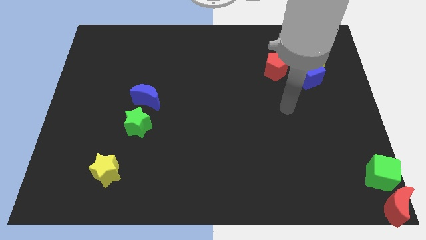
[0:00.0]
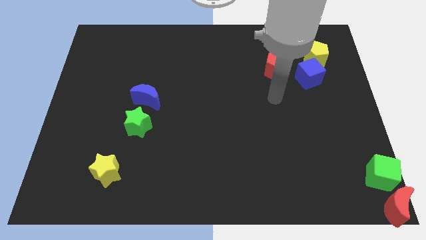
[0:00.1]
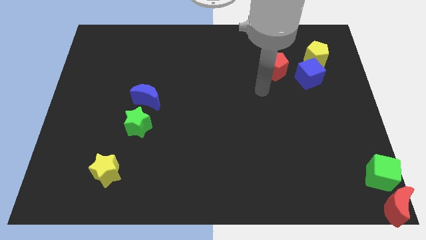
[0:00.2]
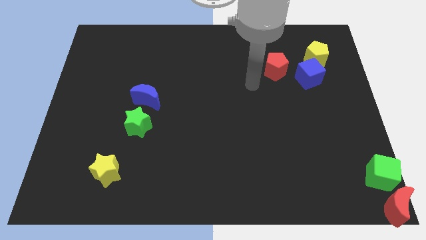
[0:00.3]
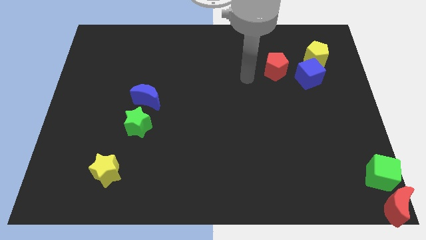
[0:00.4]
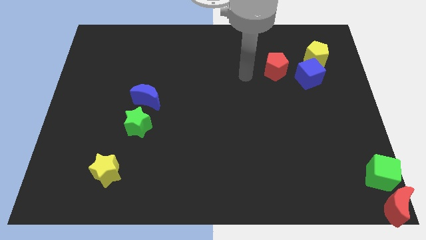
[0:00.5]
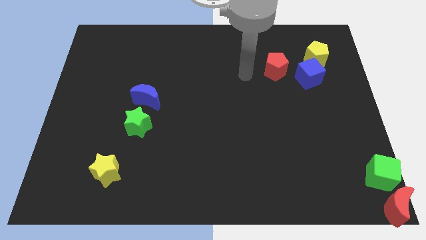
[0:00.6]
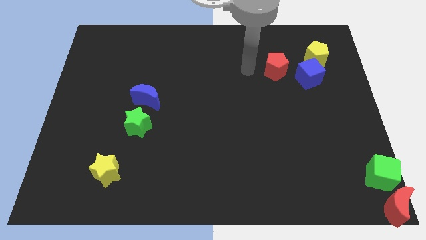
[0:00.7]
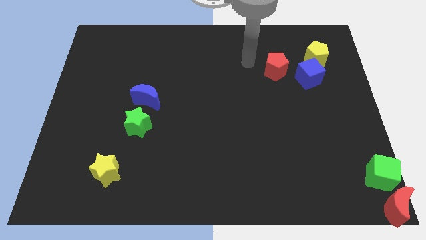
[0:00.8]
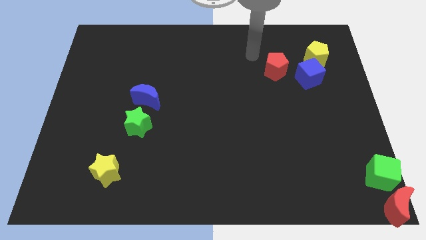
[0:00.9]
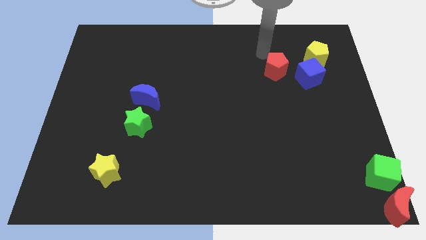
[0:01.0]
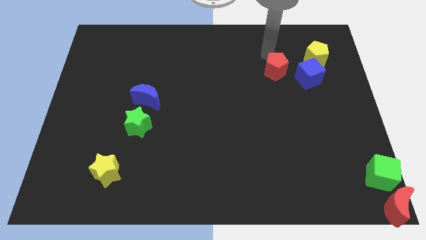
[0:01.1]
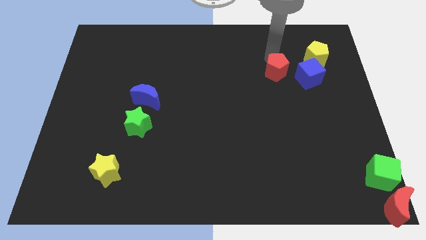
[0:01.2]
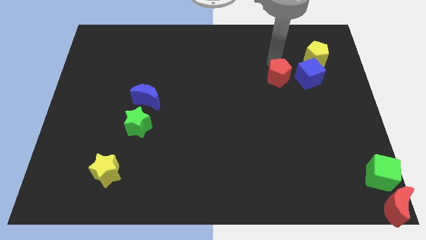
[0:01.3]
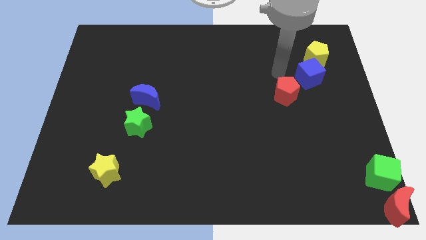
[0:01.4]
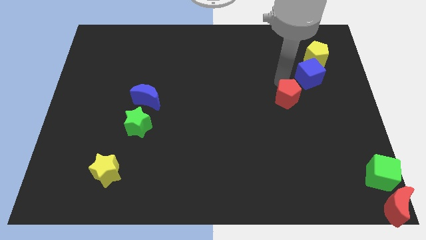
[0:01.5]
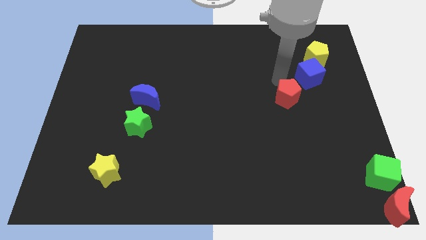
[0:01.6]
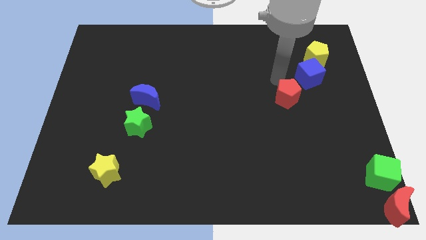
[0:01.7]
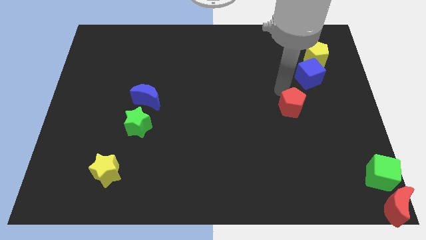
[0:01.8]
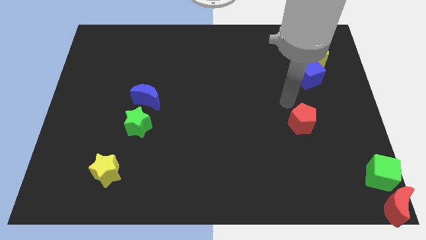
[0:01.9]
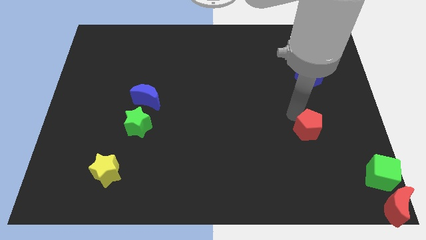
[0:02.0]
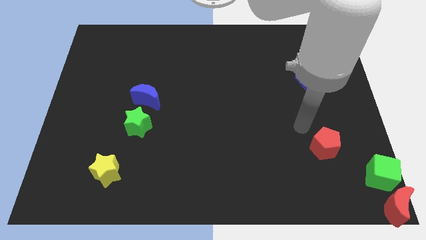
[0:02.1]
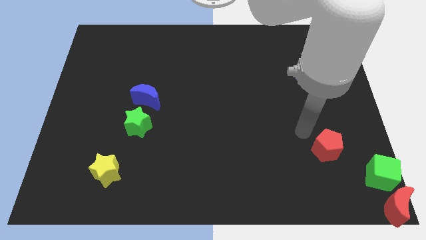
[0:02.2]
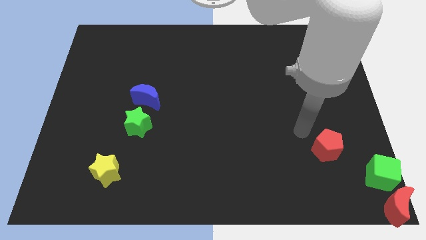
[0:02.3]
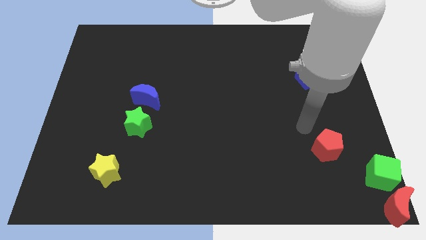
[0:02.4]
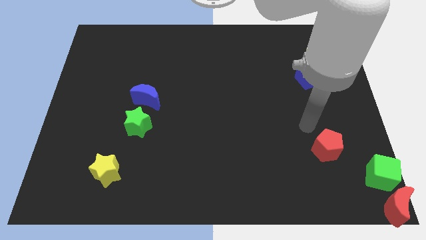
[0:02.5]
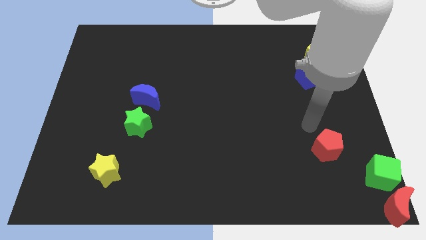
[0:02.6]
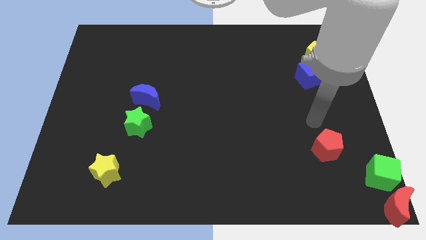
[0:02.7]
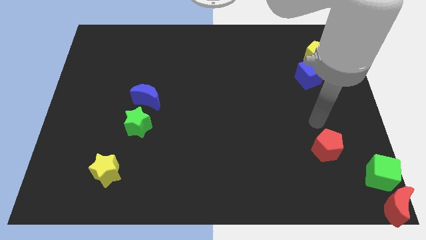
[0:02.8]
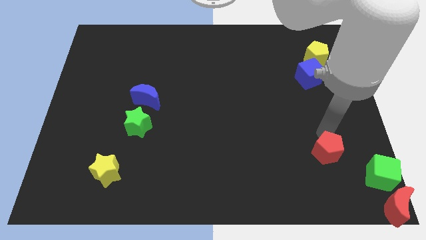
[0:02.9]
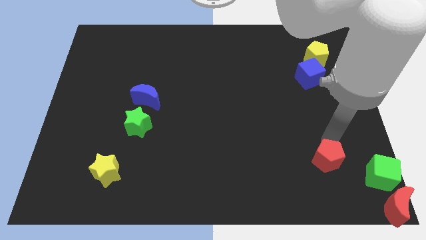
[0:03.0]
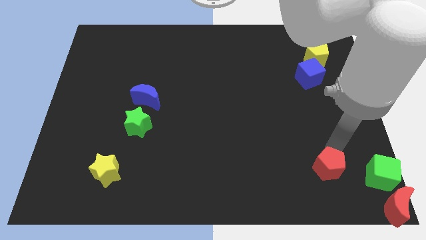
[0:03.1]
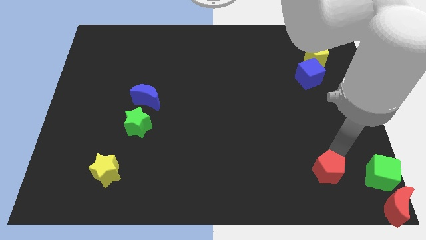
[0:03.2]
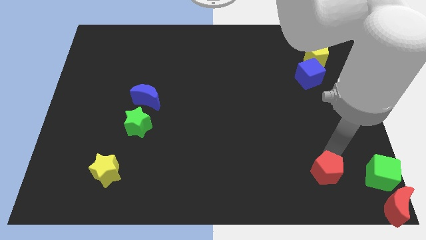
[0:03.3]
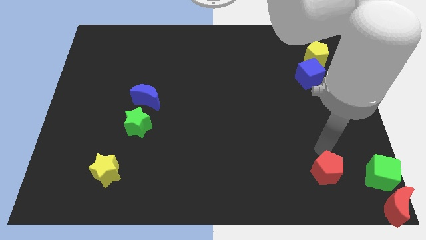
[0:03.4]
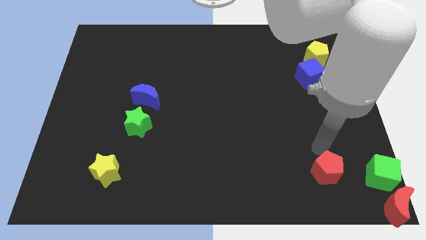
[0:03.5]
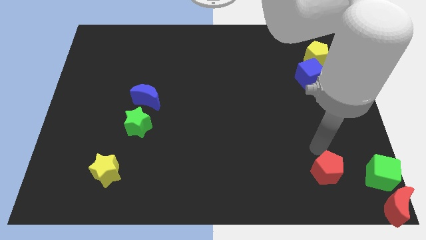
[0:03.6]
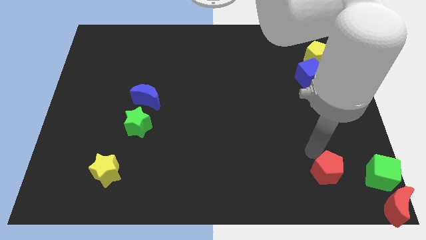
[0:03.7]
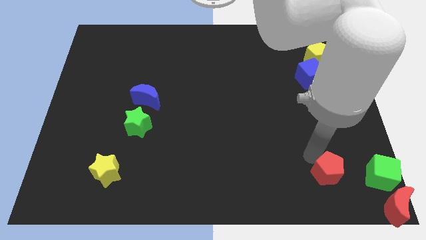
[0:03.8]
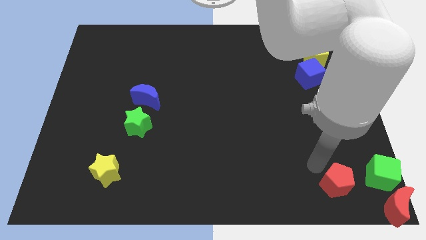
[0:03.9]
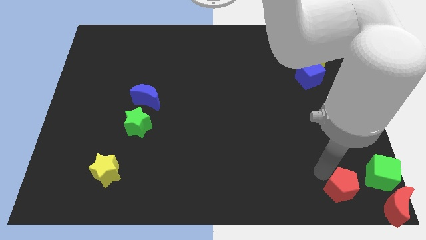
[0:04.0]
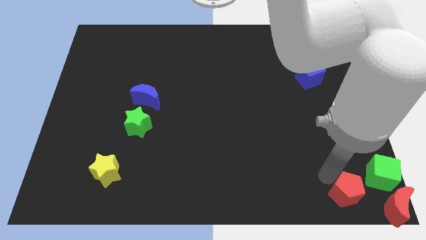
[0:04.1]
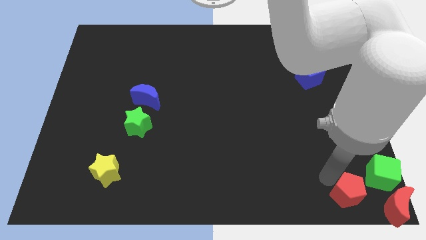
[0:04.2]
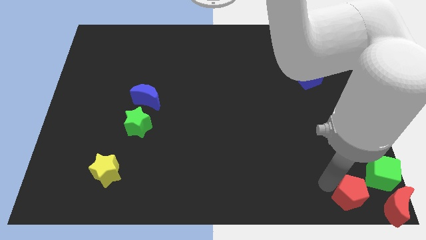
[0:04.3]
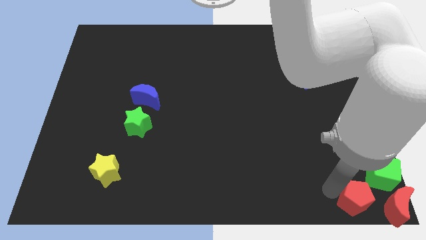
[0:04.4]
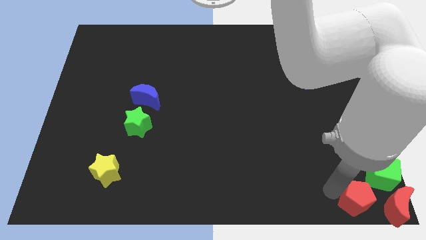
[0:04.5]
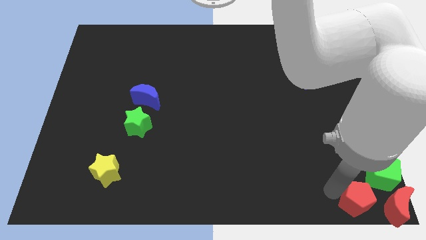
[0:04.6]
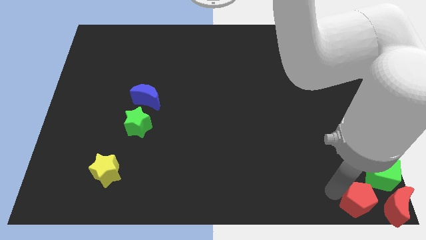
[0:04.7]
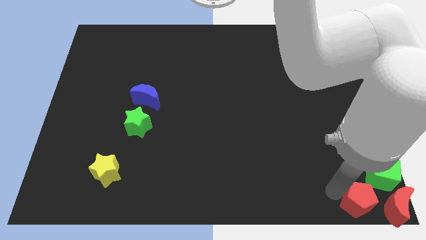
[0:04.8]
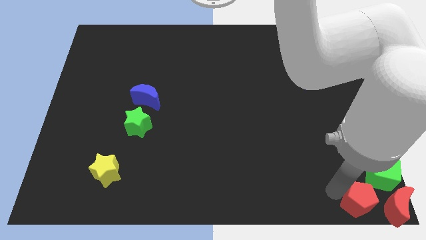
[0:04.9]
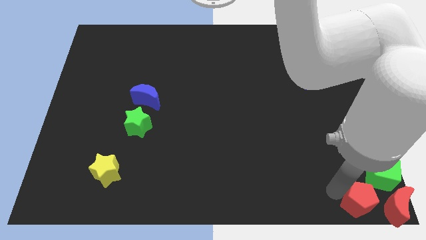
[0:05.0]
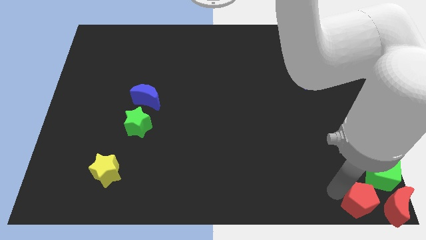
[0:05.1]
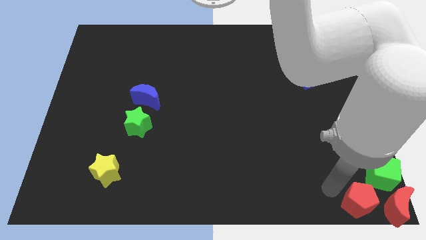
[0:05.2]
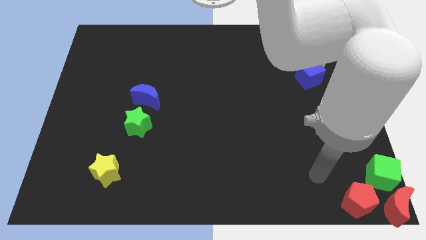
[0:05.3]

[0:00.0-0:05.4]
place the red pentagon left to the red moon

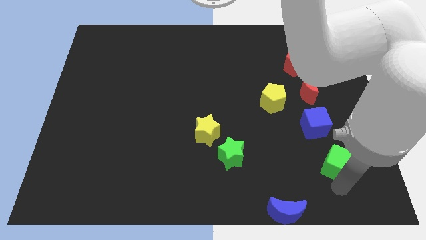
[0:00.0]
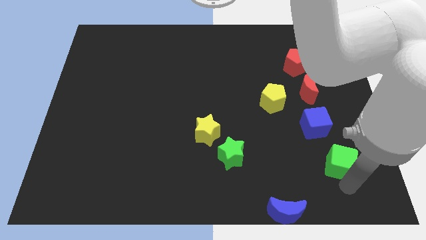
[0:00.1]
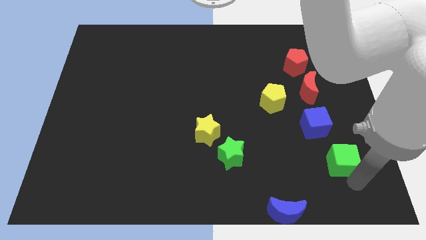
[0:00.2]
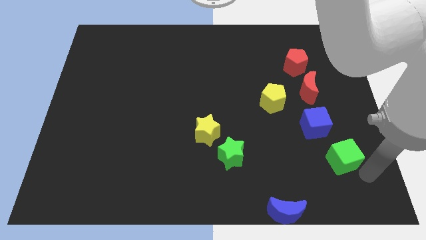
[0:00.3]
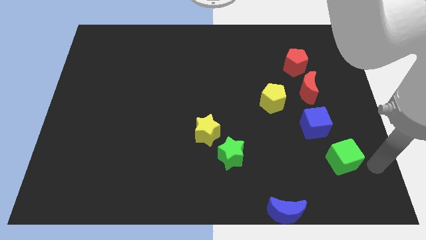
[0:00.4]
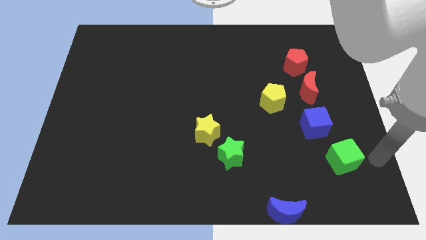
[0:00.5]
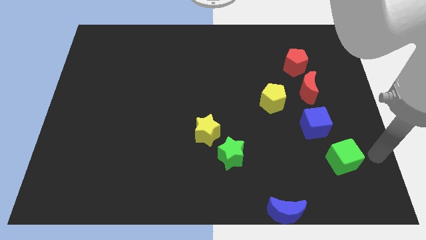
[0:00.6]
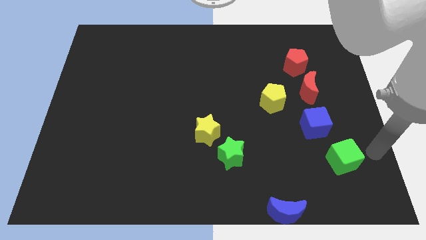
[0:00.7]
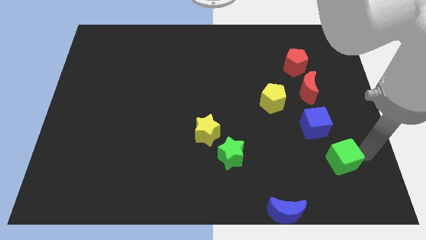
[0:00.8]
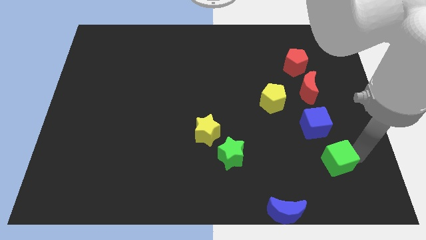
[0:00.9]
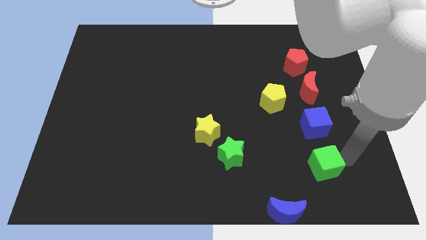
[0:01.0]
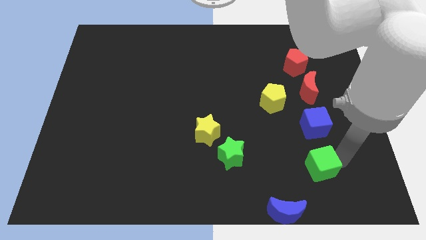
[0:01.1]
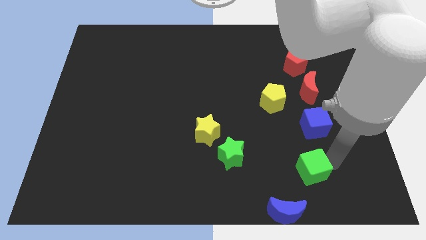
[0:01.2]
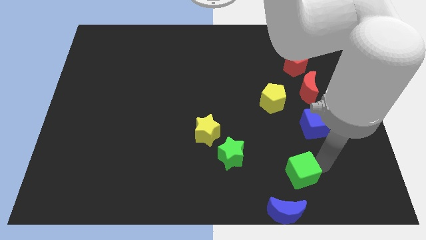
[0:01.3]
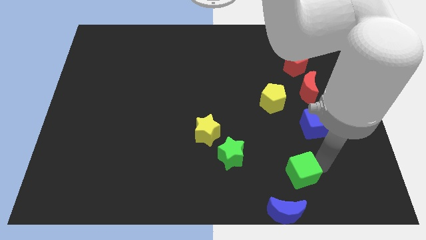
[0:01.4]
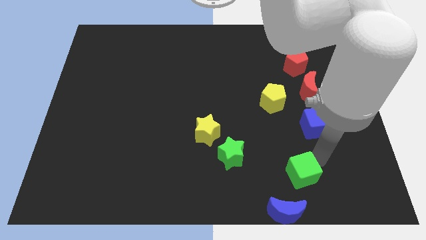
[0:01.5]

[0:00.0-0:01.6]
slide the green cube between the blue cube and blue moon

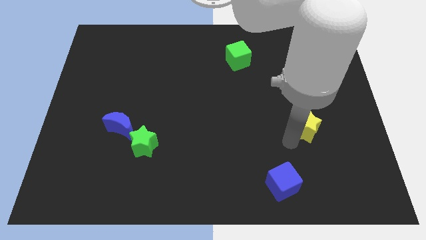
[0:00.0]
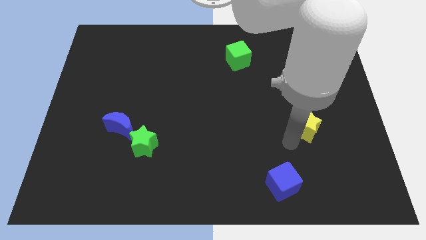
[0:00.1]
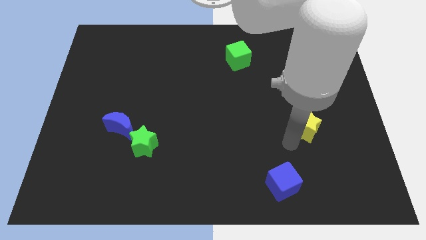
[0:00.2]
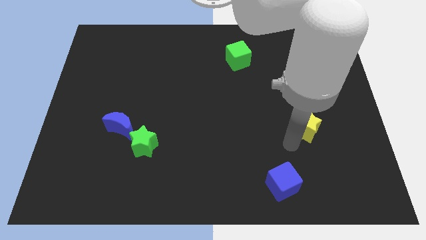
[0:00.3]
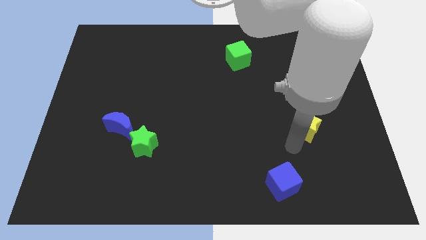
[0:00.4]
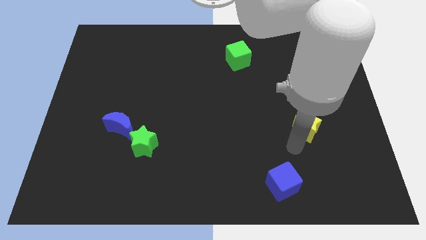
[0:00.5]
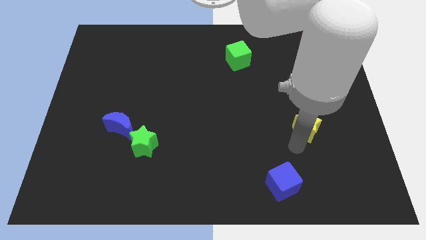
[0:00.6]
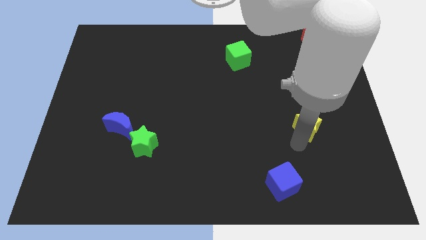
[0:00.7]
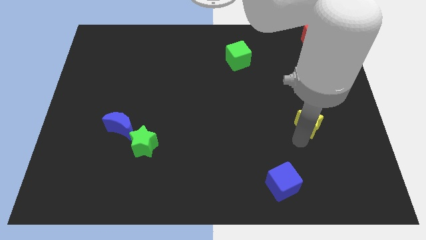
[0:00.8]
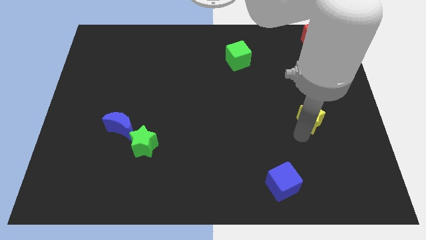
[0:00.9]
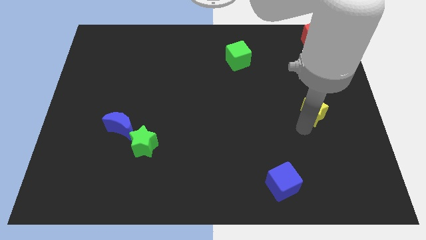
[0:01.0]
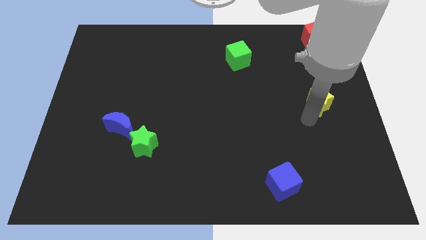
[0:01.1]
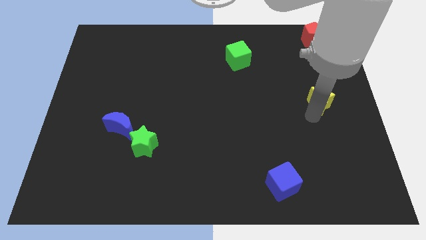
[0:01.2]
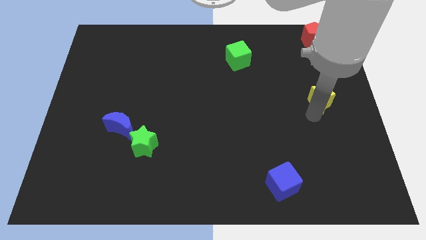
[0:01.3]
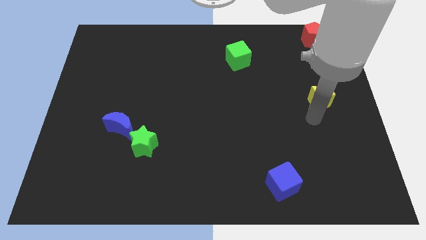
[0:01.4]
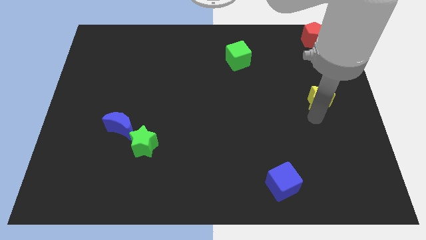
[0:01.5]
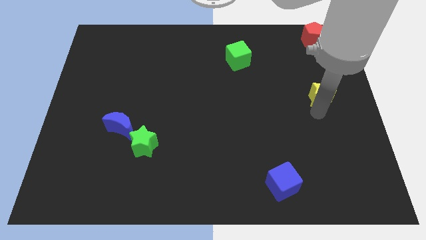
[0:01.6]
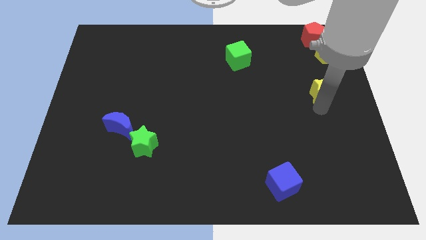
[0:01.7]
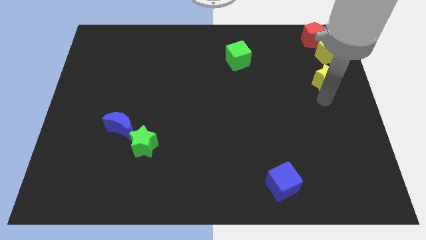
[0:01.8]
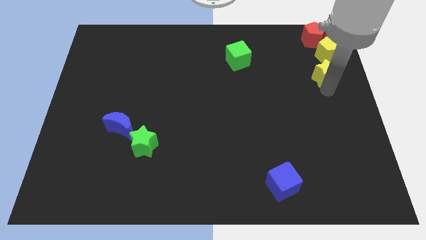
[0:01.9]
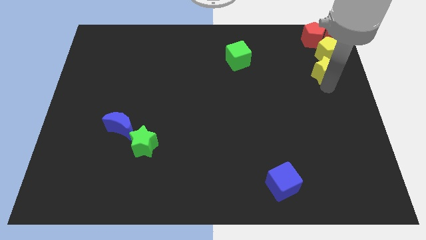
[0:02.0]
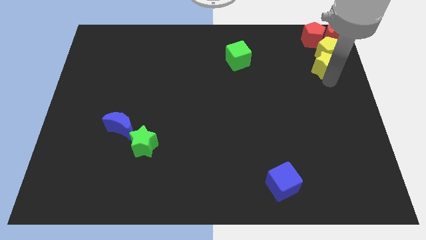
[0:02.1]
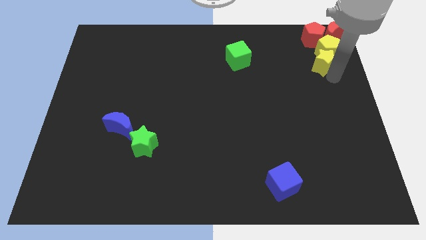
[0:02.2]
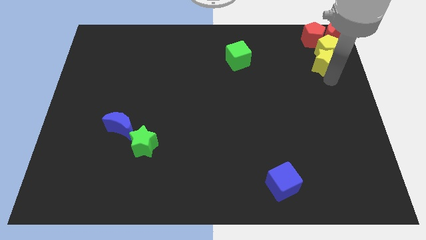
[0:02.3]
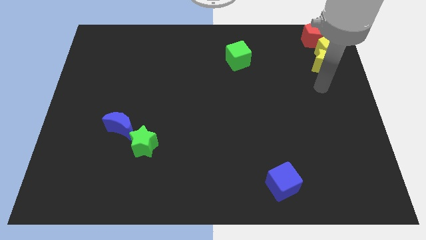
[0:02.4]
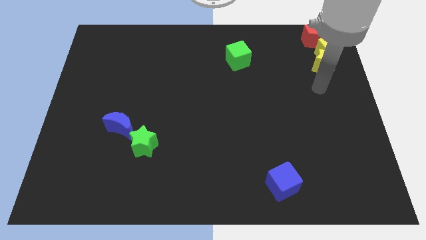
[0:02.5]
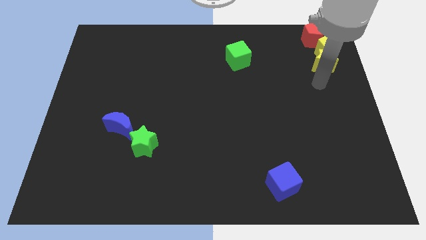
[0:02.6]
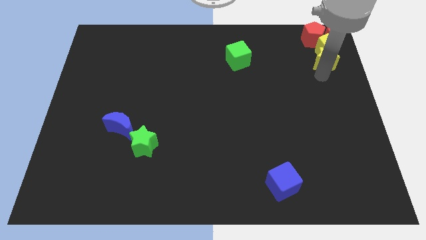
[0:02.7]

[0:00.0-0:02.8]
push the yellow star into the yellow pentagon
